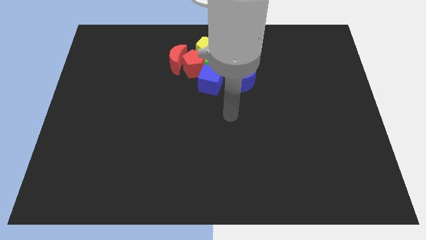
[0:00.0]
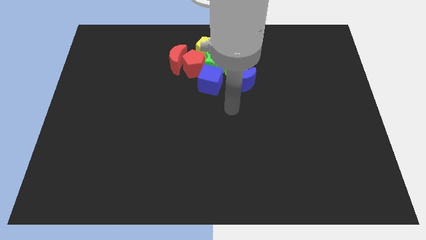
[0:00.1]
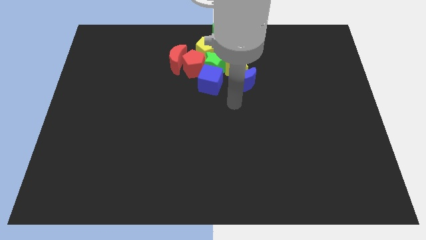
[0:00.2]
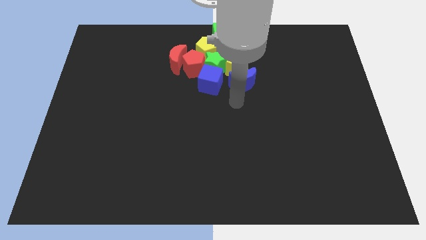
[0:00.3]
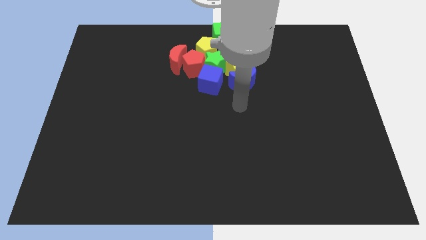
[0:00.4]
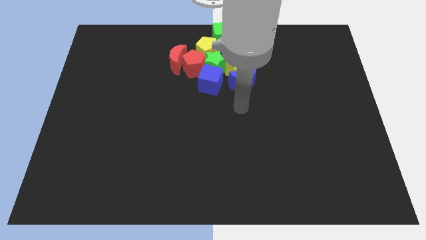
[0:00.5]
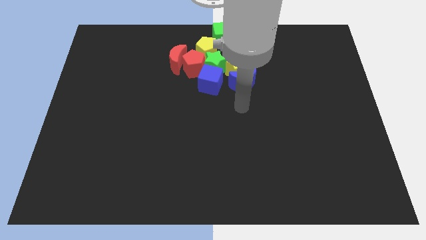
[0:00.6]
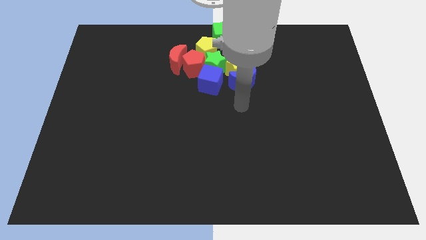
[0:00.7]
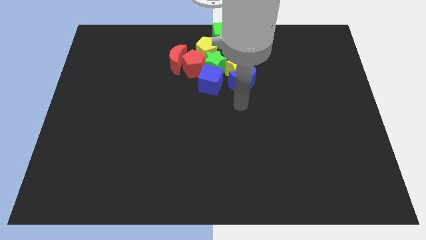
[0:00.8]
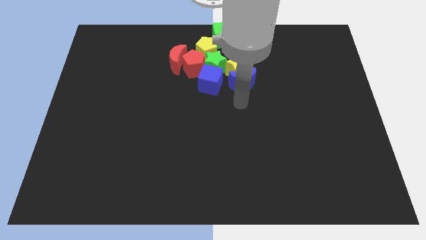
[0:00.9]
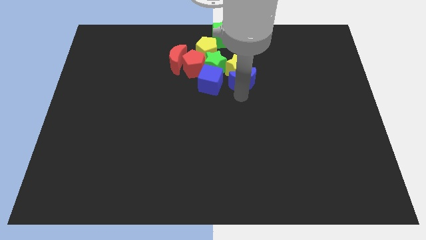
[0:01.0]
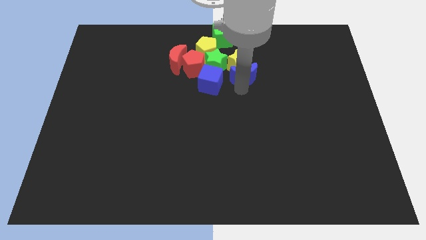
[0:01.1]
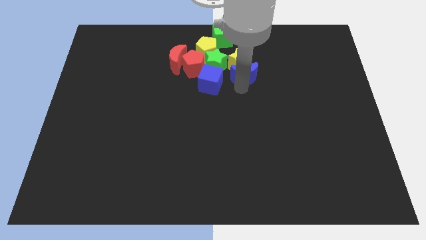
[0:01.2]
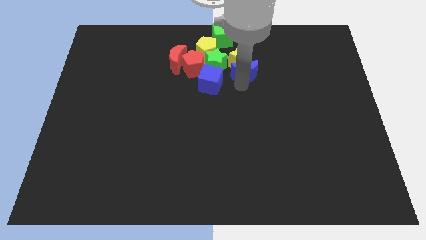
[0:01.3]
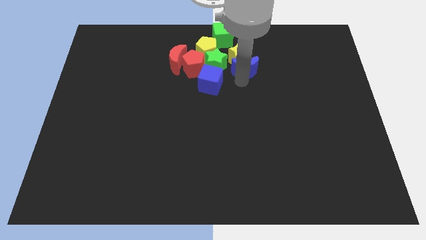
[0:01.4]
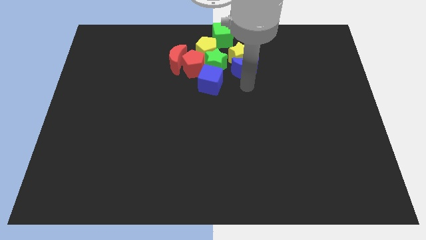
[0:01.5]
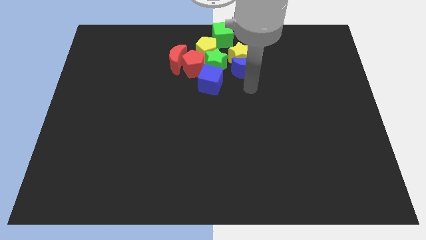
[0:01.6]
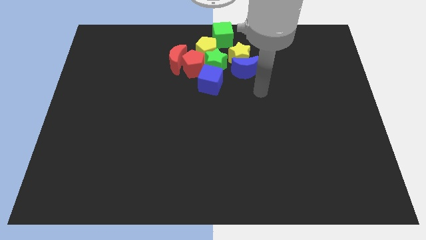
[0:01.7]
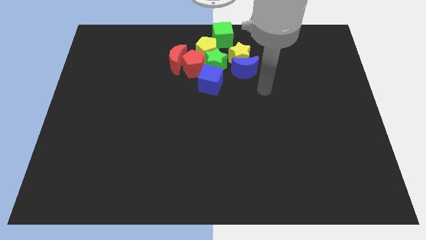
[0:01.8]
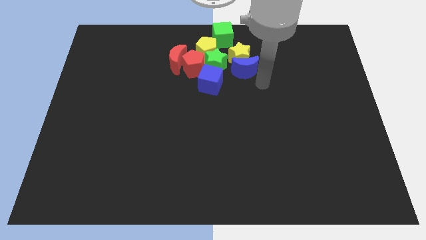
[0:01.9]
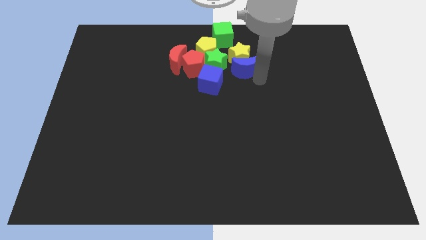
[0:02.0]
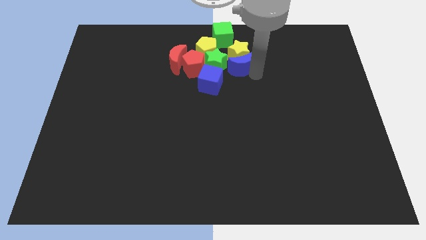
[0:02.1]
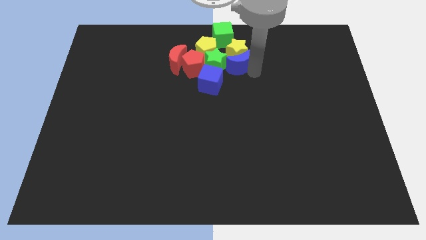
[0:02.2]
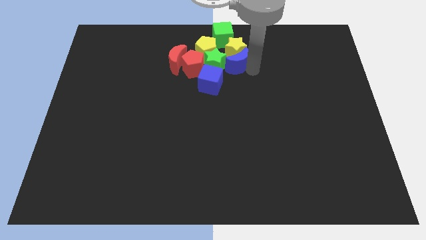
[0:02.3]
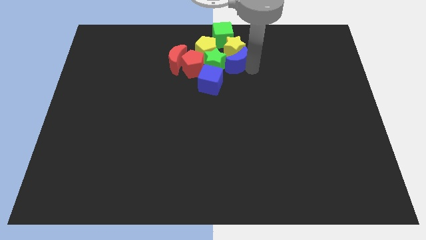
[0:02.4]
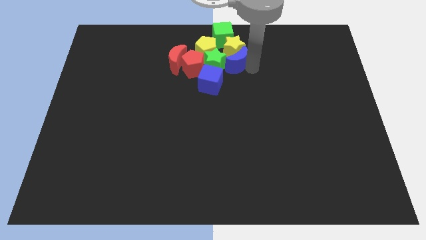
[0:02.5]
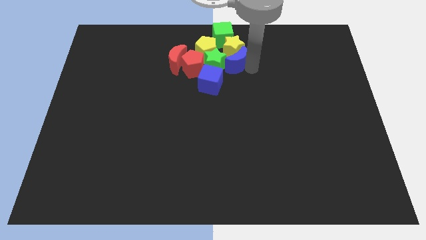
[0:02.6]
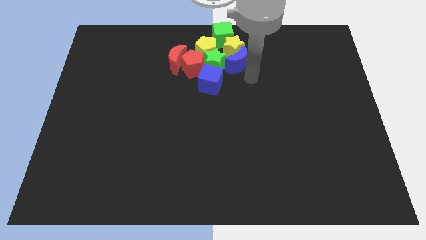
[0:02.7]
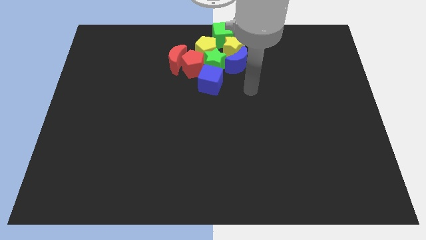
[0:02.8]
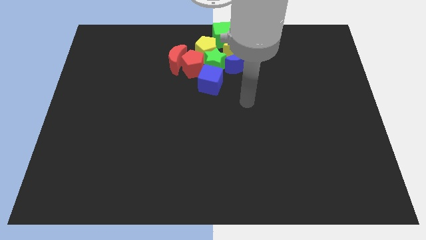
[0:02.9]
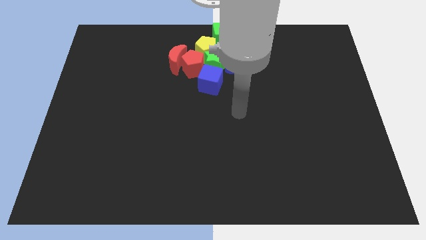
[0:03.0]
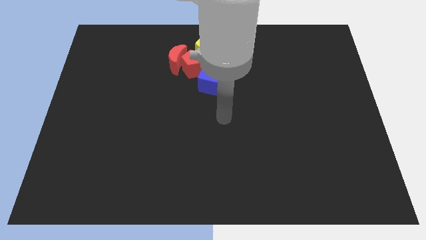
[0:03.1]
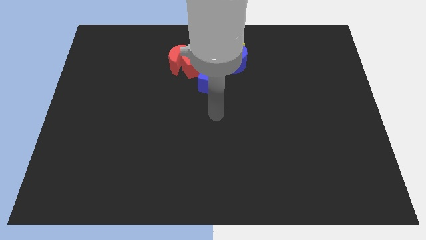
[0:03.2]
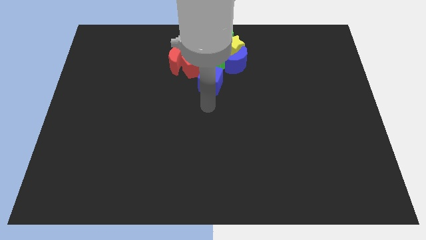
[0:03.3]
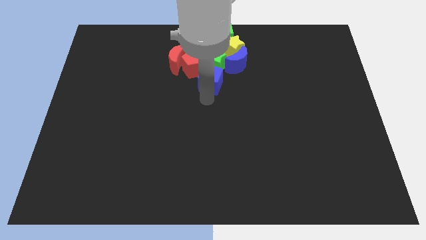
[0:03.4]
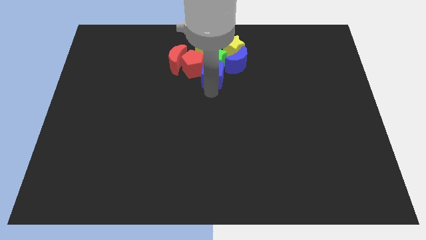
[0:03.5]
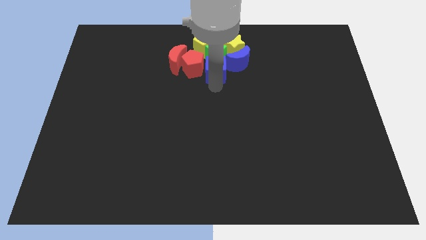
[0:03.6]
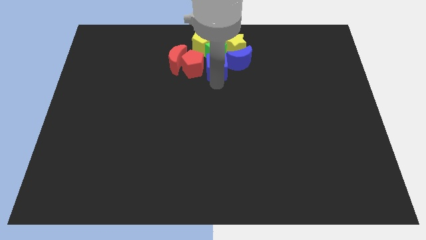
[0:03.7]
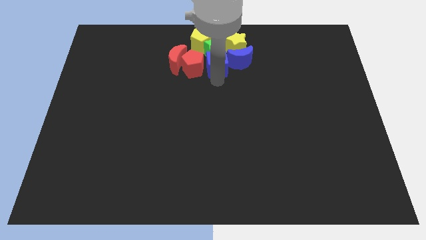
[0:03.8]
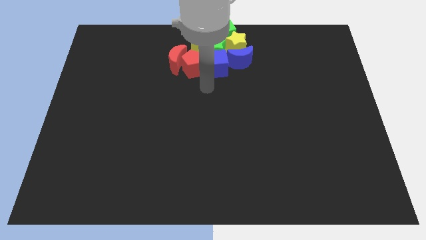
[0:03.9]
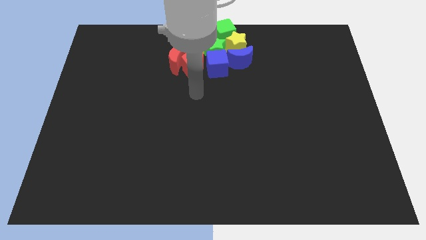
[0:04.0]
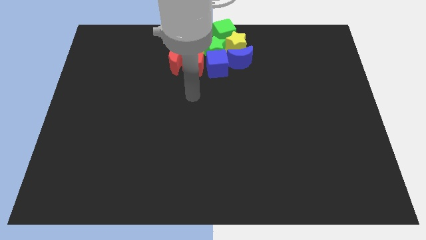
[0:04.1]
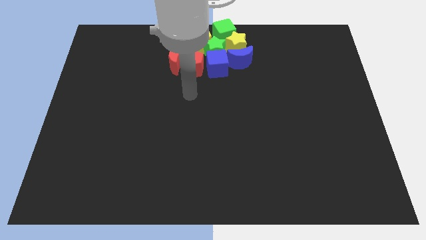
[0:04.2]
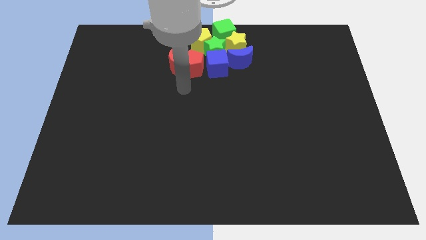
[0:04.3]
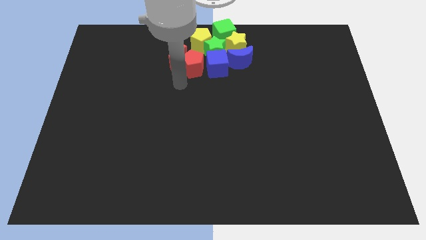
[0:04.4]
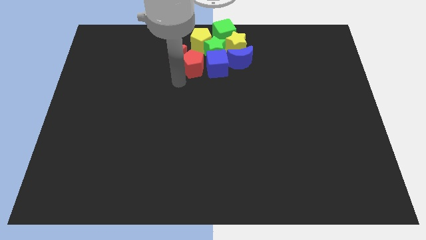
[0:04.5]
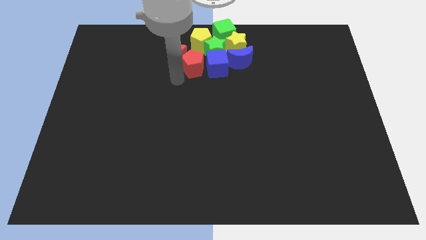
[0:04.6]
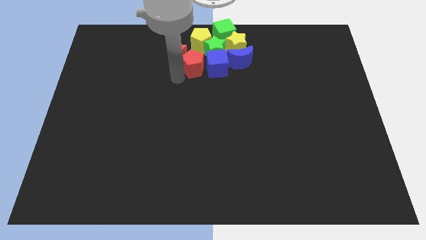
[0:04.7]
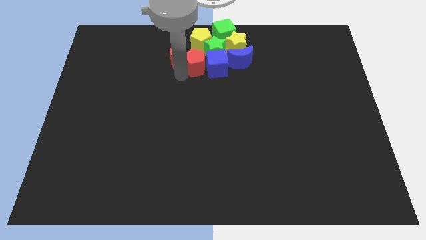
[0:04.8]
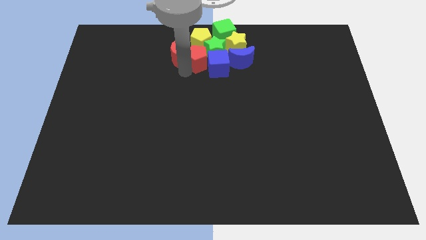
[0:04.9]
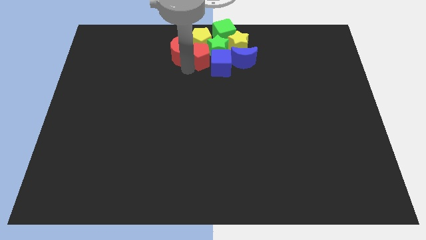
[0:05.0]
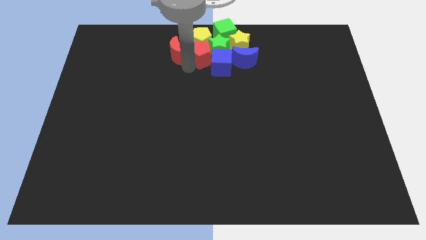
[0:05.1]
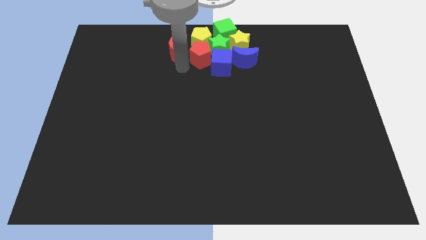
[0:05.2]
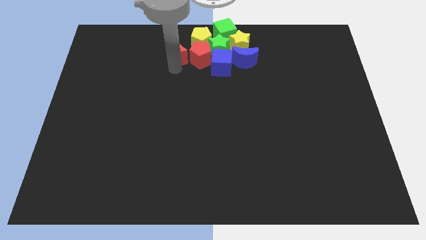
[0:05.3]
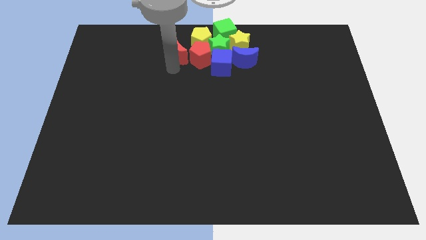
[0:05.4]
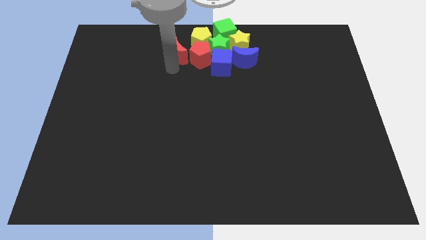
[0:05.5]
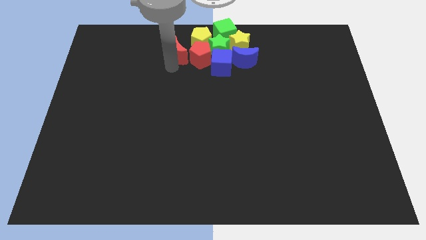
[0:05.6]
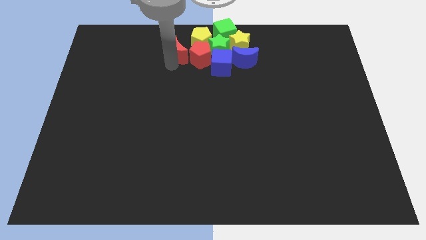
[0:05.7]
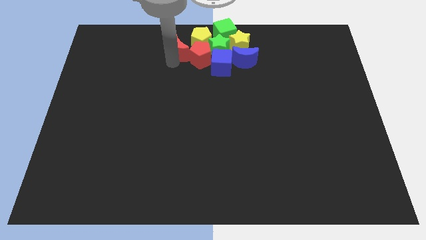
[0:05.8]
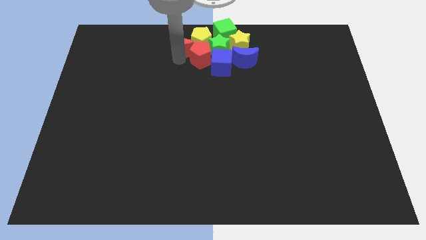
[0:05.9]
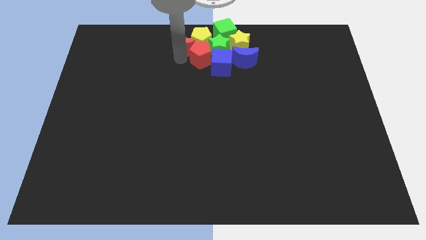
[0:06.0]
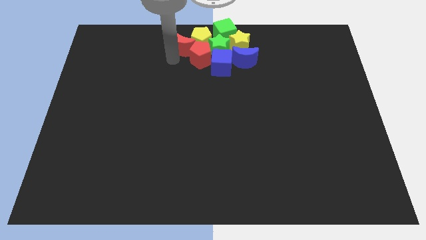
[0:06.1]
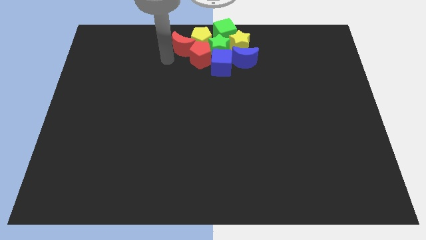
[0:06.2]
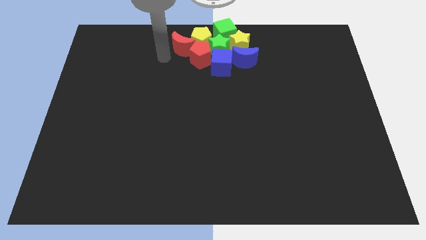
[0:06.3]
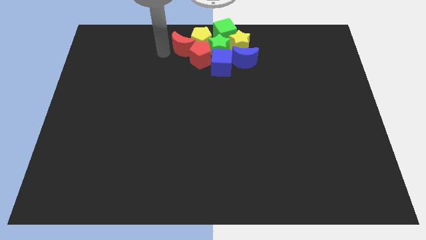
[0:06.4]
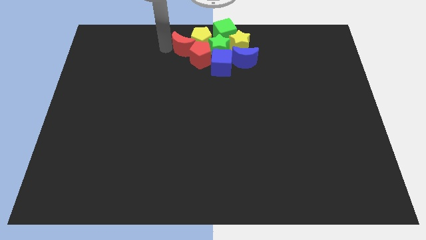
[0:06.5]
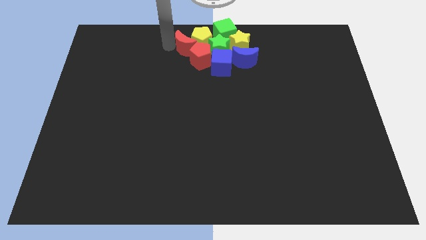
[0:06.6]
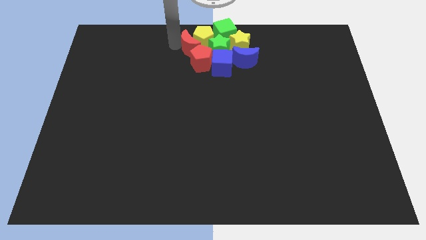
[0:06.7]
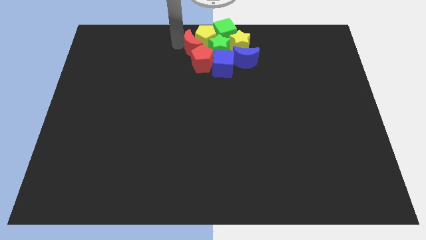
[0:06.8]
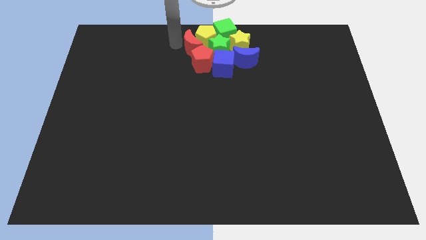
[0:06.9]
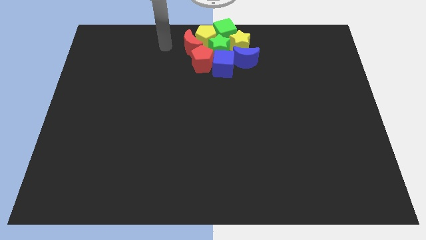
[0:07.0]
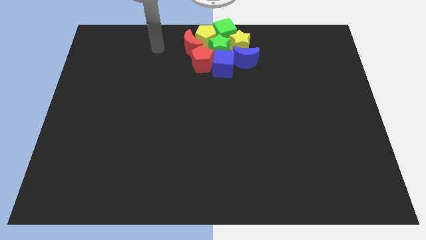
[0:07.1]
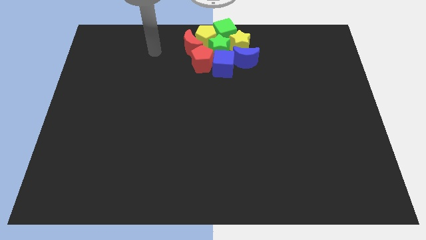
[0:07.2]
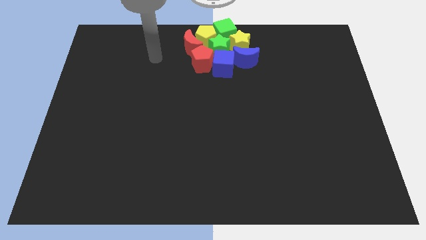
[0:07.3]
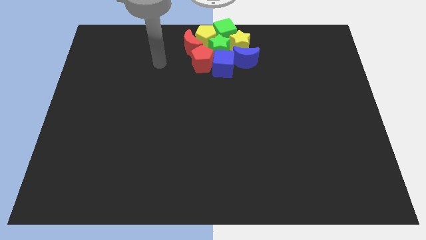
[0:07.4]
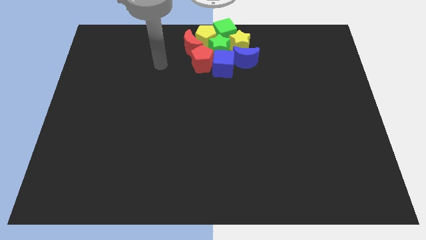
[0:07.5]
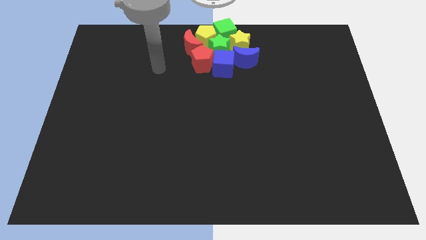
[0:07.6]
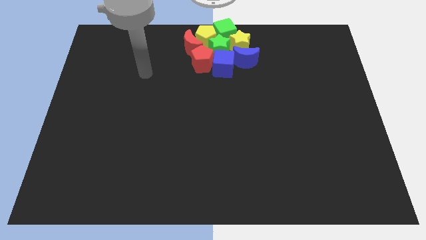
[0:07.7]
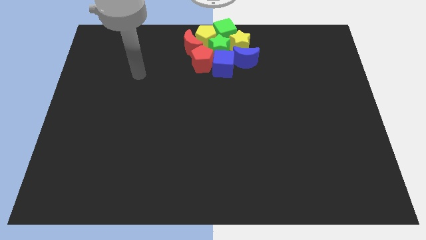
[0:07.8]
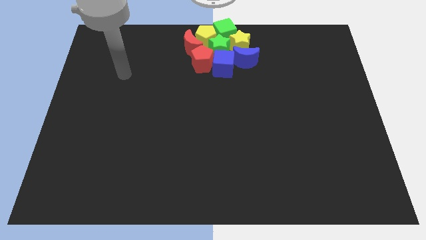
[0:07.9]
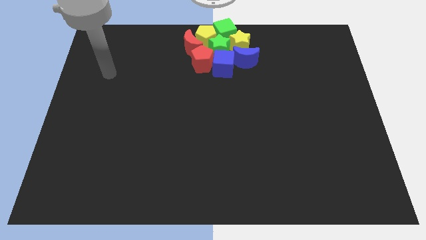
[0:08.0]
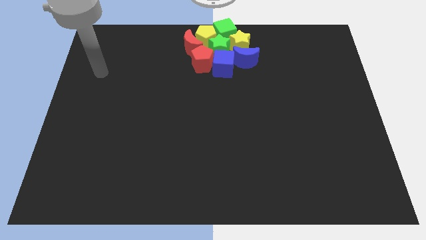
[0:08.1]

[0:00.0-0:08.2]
adjust the group of blocks towards the top center

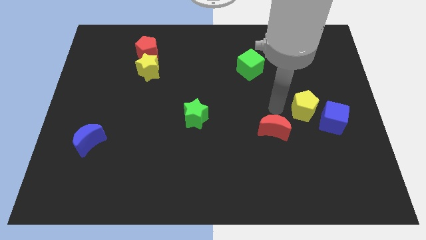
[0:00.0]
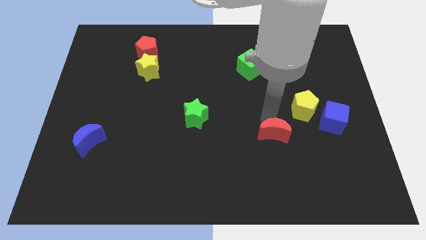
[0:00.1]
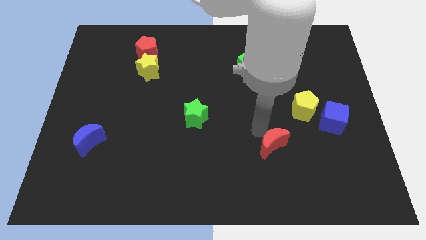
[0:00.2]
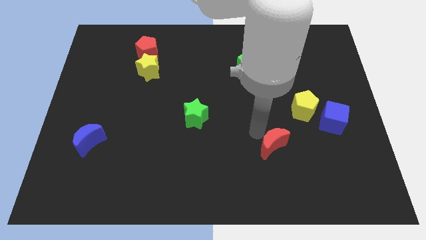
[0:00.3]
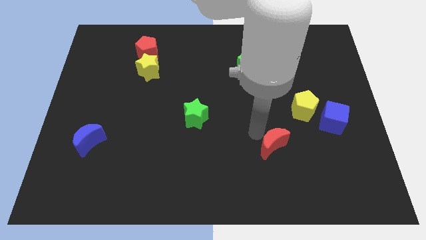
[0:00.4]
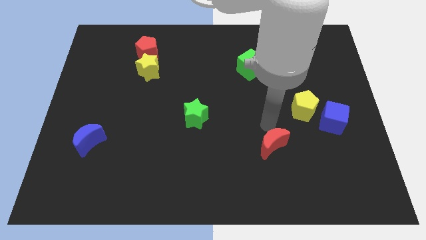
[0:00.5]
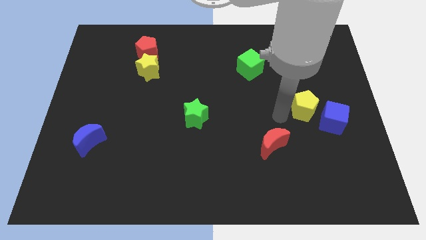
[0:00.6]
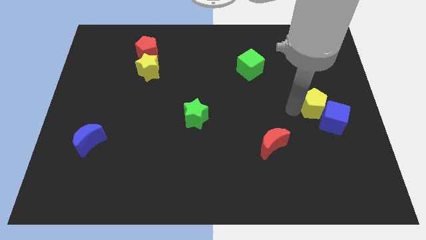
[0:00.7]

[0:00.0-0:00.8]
move the red crescent to the bottom of the board

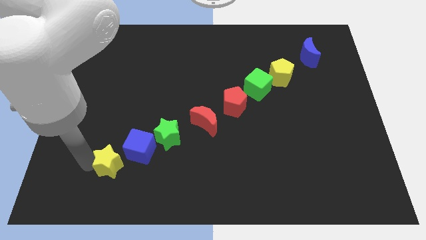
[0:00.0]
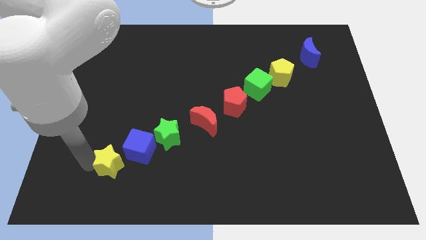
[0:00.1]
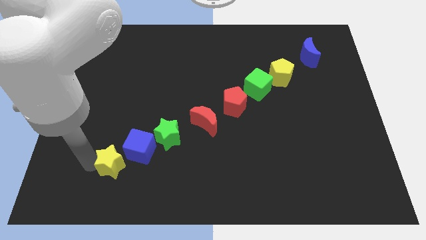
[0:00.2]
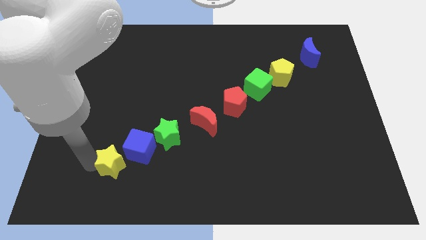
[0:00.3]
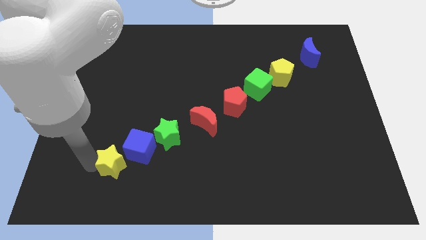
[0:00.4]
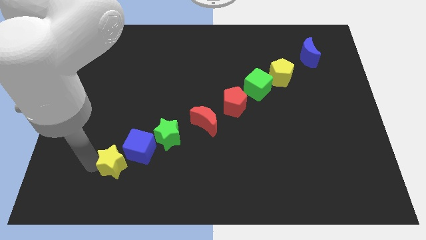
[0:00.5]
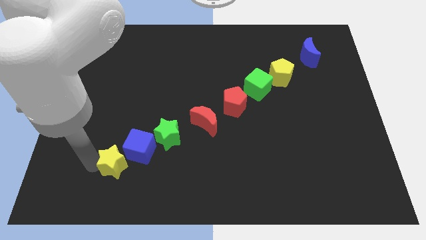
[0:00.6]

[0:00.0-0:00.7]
move the yellow star closure to the blue cube
